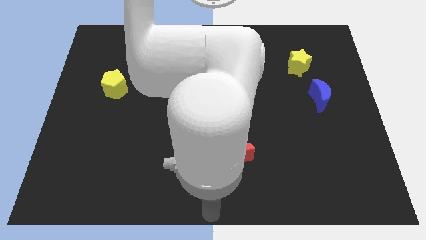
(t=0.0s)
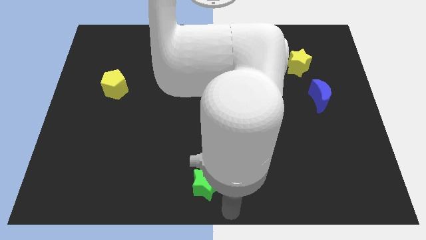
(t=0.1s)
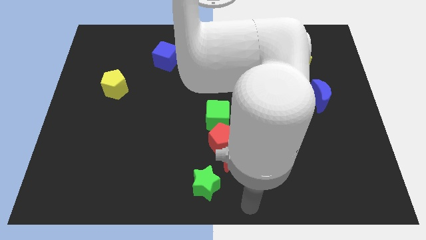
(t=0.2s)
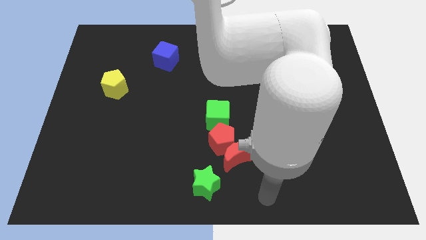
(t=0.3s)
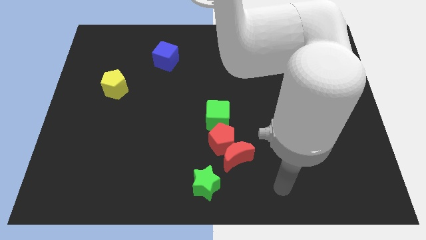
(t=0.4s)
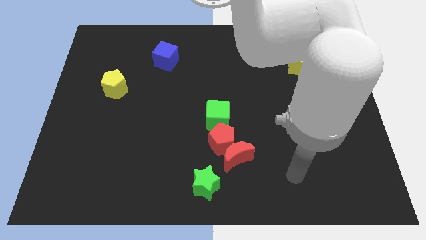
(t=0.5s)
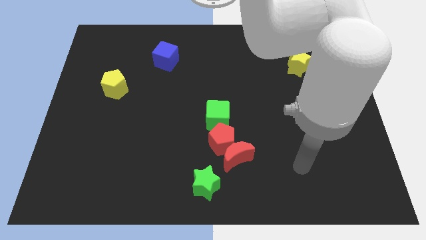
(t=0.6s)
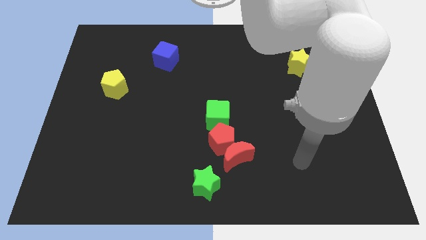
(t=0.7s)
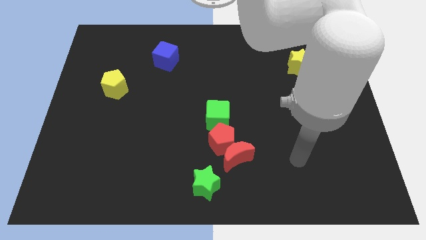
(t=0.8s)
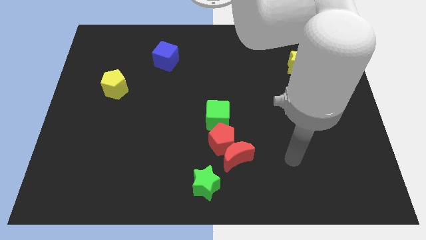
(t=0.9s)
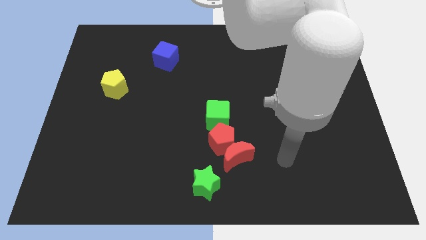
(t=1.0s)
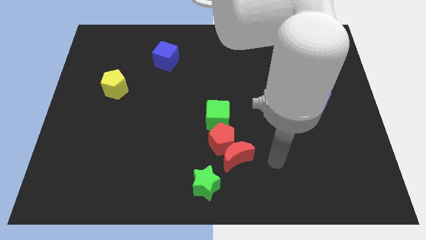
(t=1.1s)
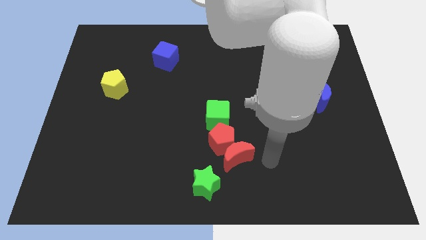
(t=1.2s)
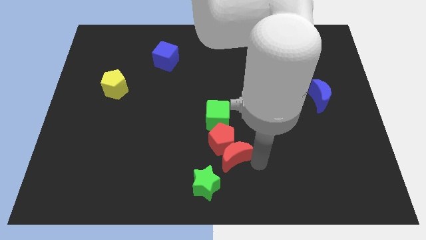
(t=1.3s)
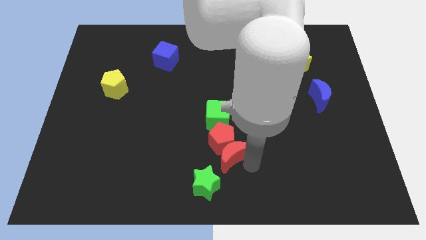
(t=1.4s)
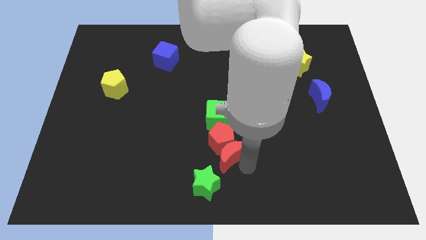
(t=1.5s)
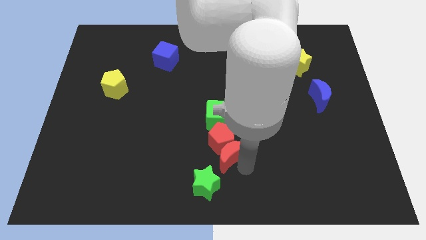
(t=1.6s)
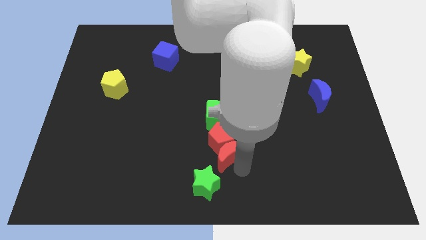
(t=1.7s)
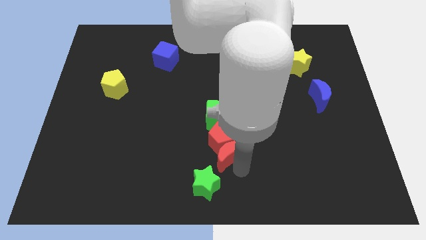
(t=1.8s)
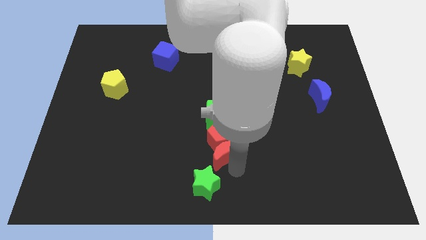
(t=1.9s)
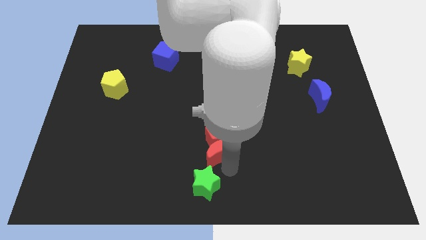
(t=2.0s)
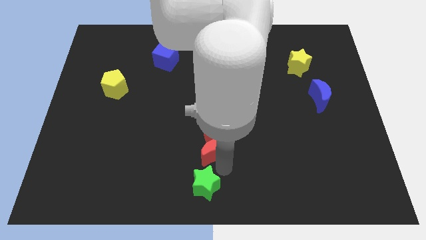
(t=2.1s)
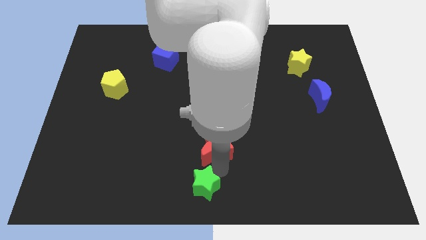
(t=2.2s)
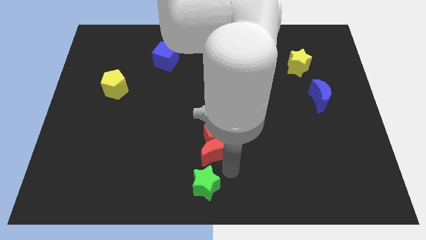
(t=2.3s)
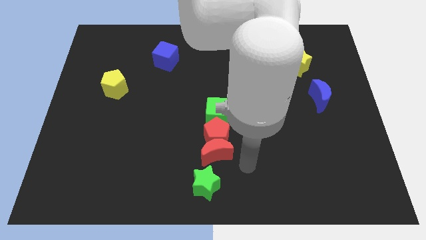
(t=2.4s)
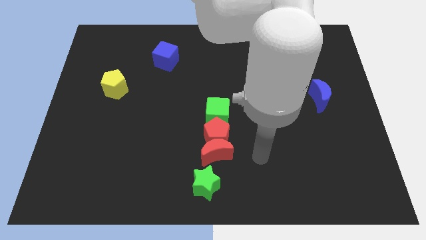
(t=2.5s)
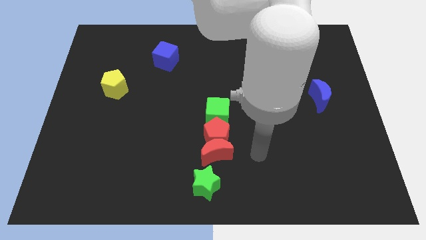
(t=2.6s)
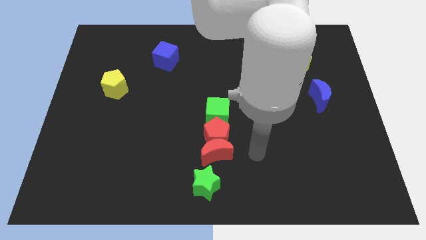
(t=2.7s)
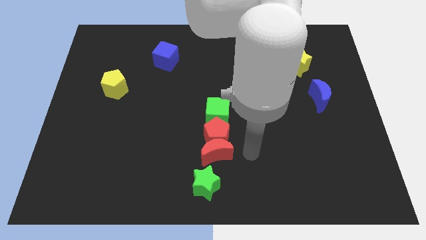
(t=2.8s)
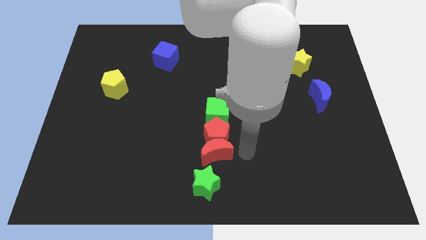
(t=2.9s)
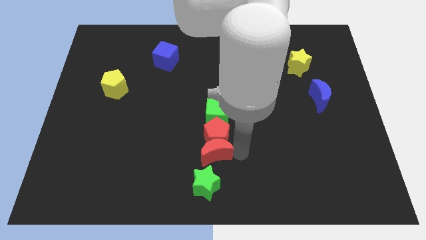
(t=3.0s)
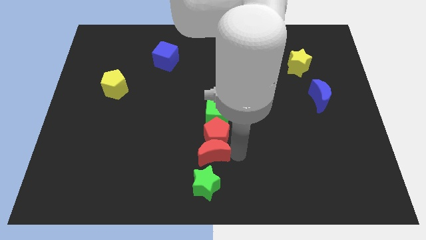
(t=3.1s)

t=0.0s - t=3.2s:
place red blocks in between the green blocks

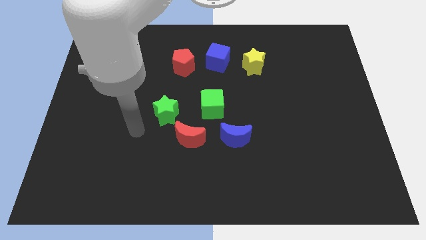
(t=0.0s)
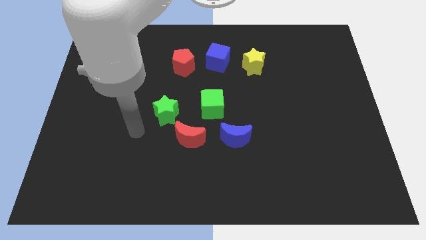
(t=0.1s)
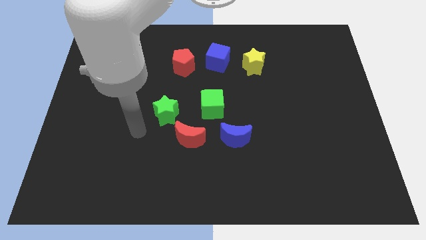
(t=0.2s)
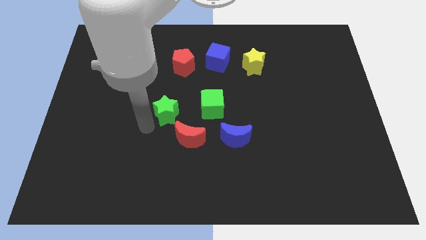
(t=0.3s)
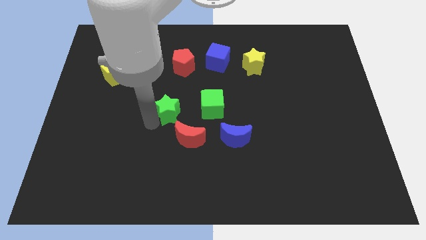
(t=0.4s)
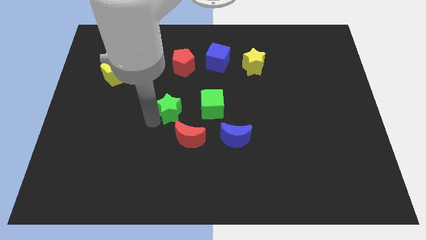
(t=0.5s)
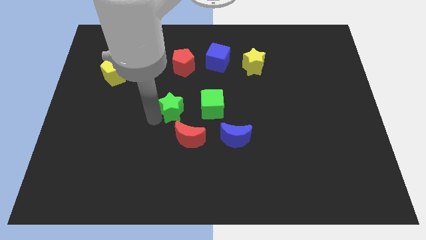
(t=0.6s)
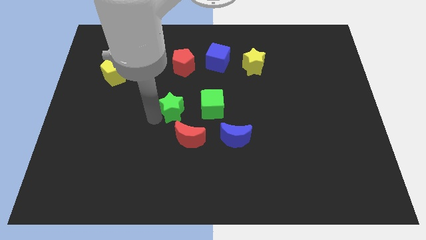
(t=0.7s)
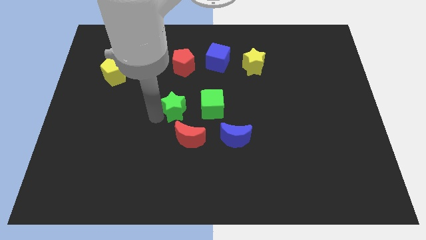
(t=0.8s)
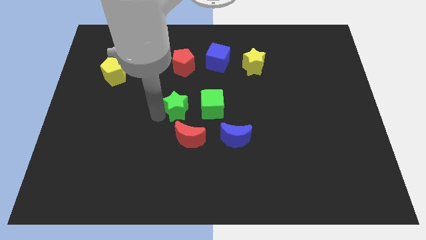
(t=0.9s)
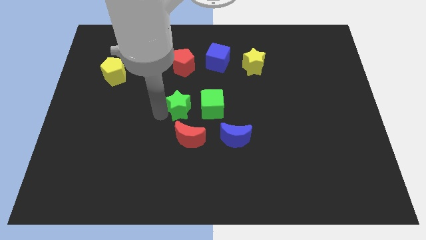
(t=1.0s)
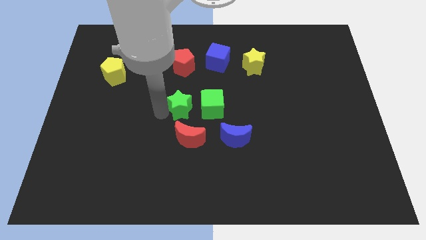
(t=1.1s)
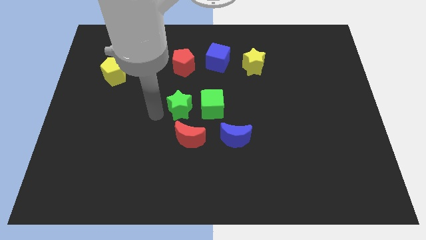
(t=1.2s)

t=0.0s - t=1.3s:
push green star above red moon

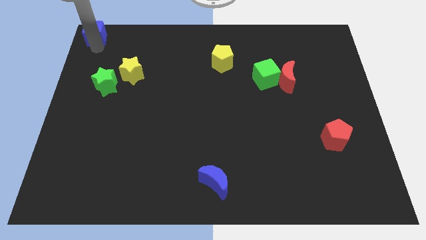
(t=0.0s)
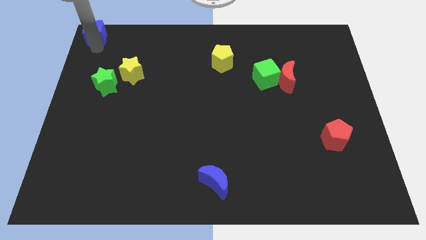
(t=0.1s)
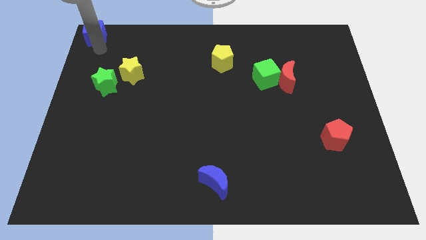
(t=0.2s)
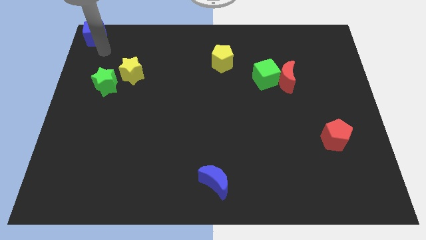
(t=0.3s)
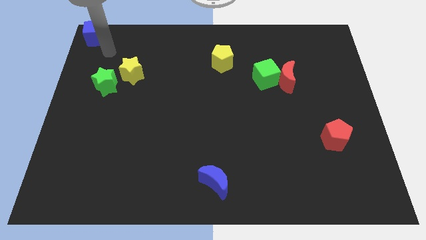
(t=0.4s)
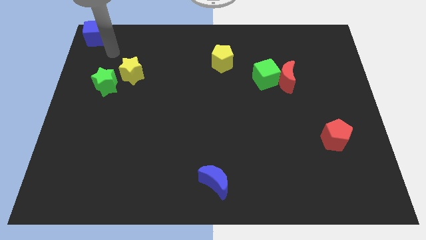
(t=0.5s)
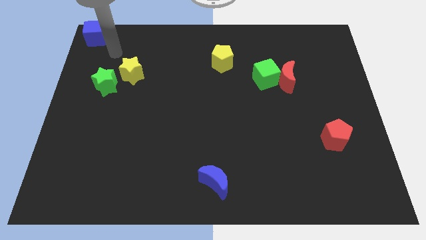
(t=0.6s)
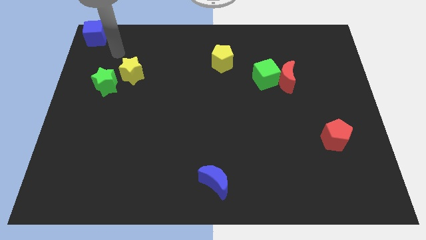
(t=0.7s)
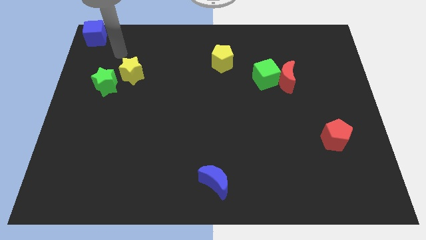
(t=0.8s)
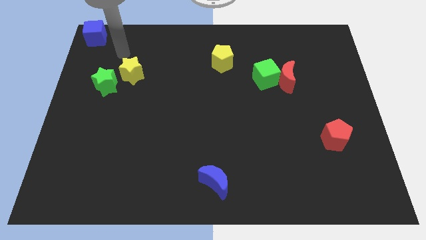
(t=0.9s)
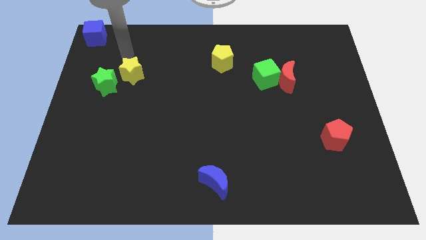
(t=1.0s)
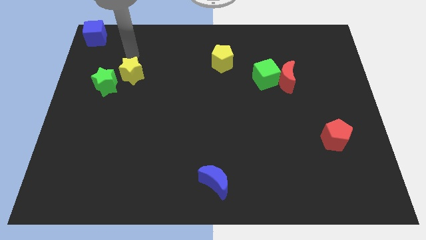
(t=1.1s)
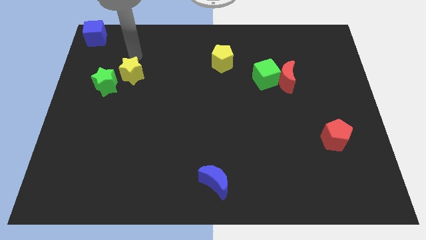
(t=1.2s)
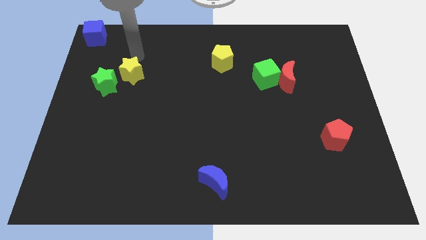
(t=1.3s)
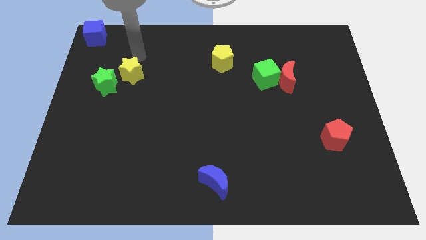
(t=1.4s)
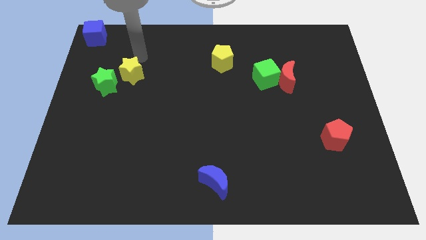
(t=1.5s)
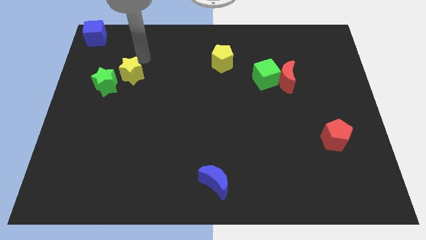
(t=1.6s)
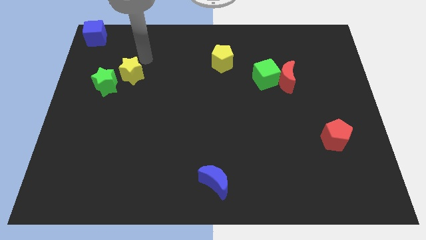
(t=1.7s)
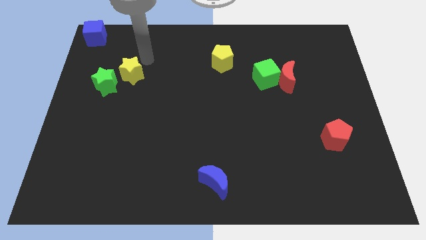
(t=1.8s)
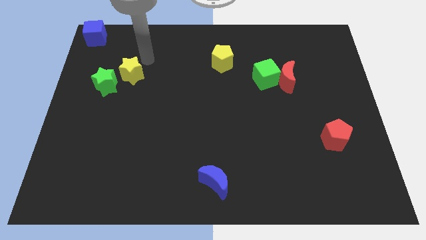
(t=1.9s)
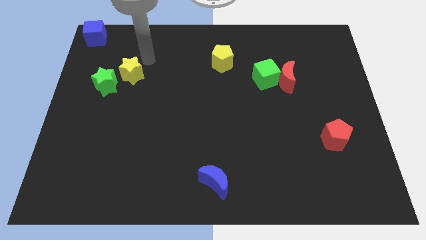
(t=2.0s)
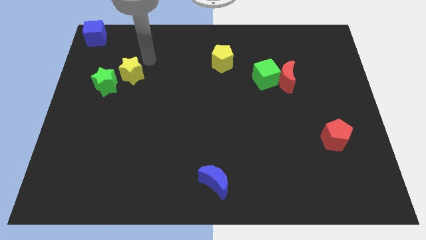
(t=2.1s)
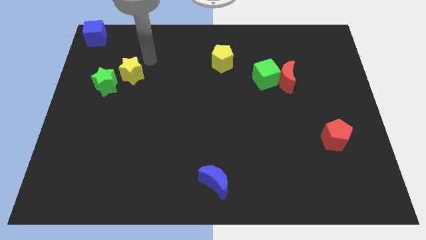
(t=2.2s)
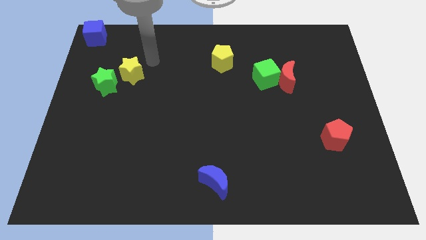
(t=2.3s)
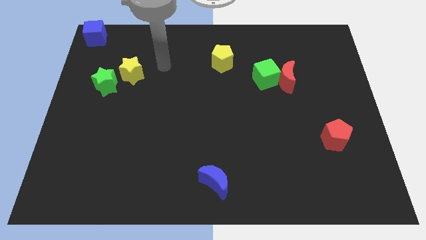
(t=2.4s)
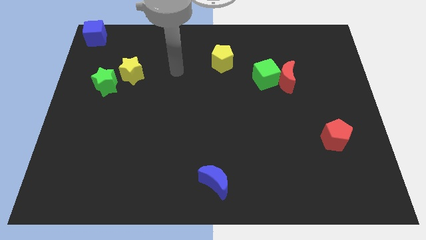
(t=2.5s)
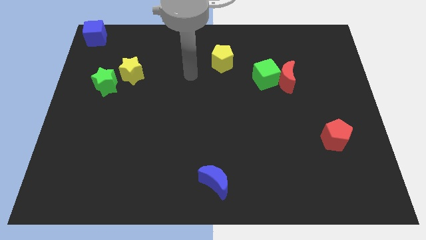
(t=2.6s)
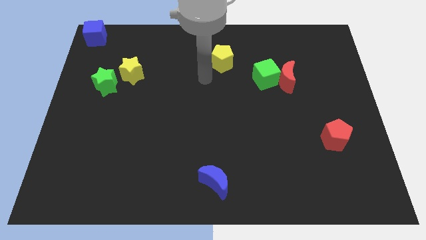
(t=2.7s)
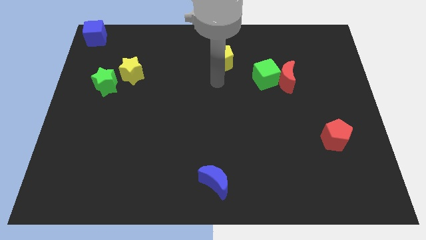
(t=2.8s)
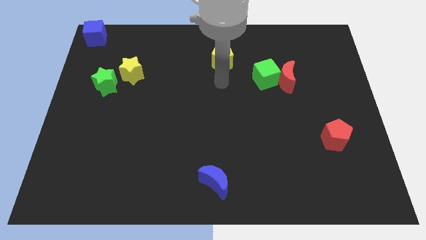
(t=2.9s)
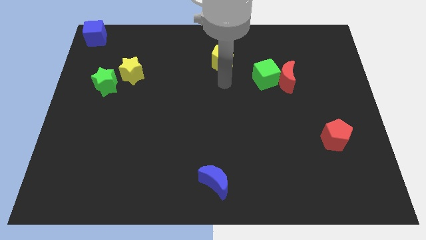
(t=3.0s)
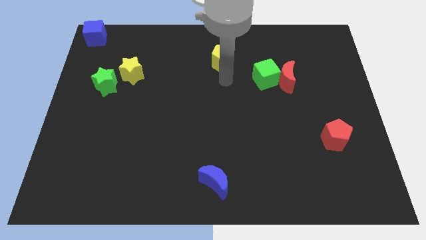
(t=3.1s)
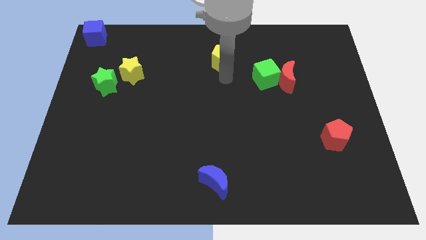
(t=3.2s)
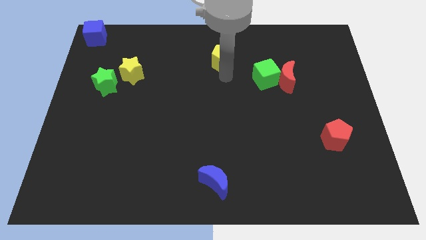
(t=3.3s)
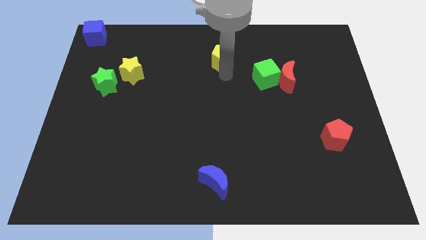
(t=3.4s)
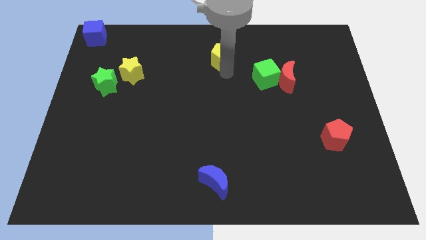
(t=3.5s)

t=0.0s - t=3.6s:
tap the bottm side of teh yellow pentagon

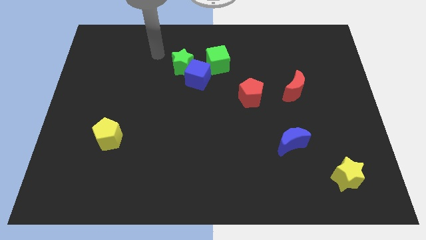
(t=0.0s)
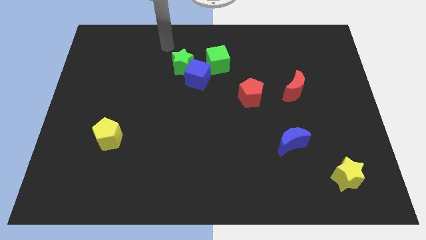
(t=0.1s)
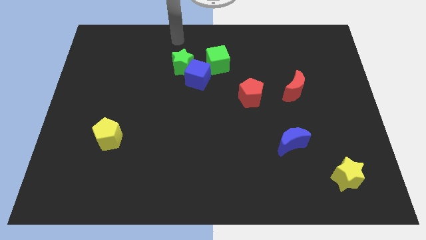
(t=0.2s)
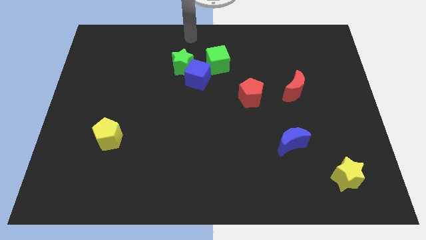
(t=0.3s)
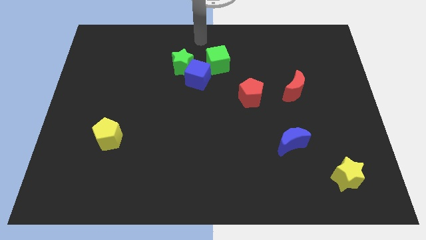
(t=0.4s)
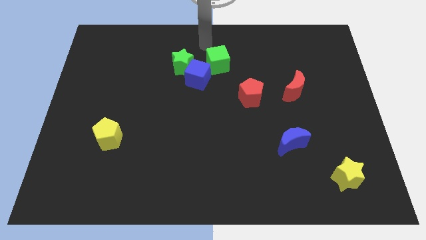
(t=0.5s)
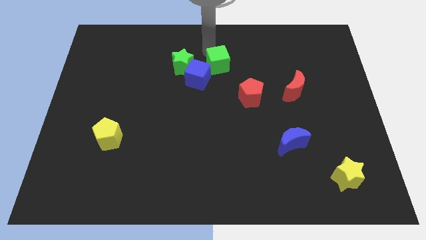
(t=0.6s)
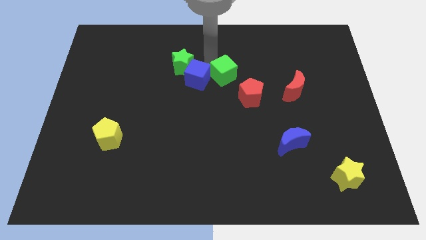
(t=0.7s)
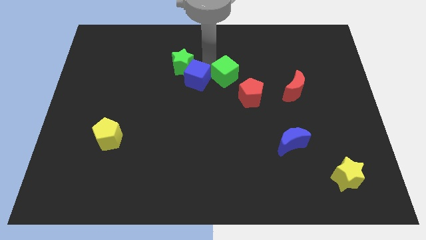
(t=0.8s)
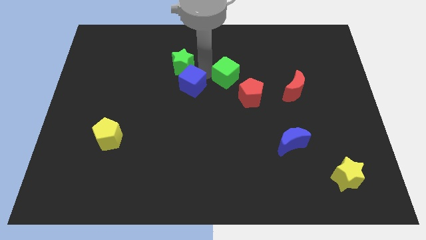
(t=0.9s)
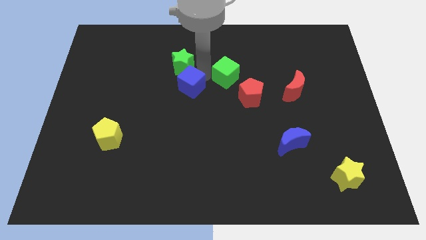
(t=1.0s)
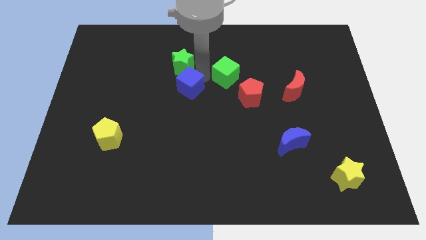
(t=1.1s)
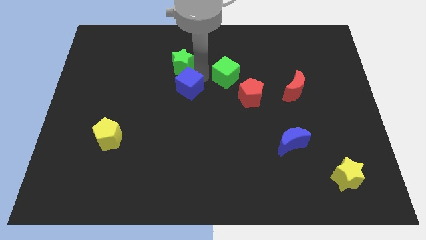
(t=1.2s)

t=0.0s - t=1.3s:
place blue cube below green star
